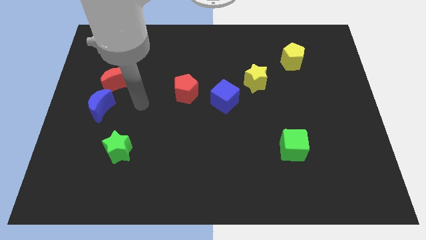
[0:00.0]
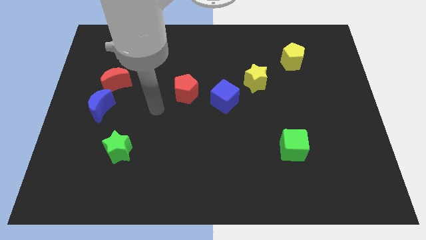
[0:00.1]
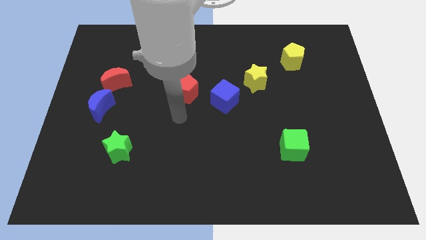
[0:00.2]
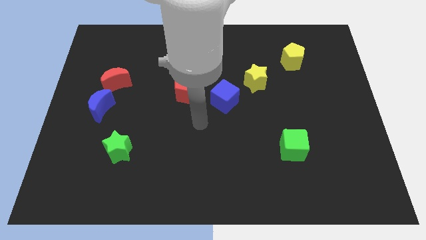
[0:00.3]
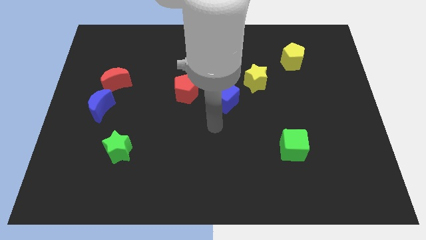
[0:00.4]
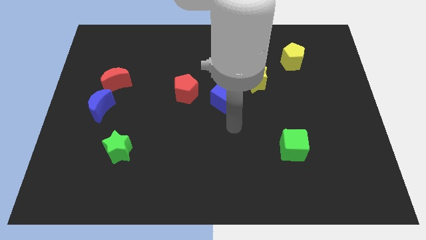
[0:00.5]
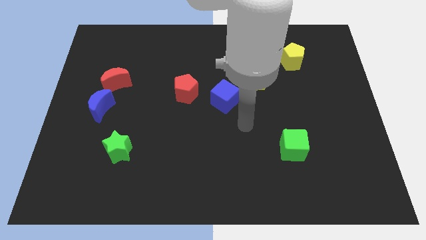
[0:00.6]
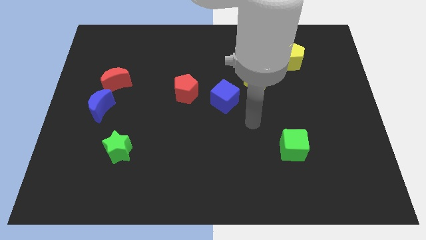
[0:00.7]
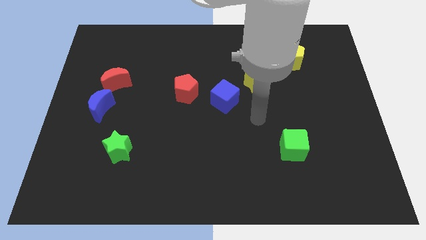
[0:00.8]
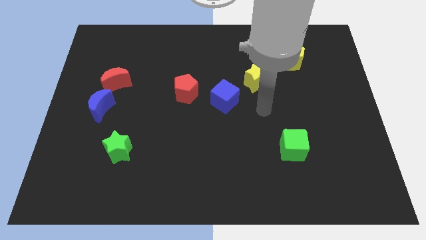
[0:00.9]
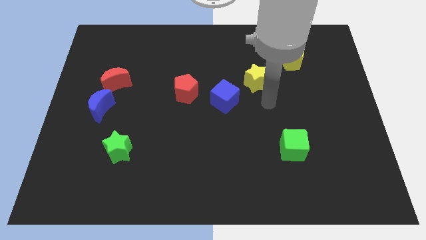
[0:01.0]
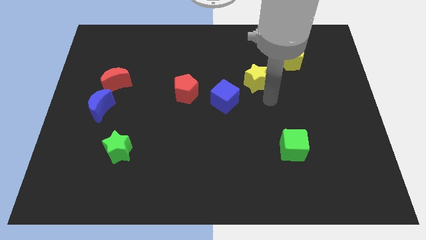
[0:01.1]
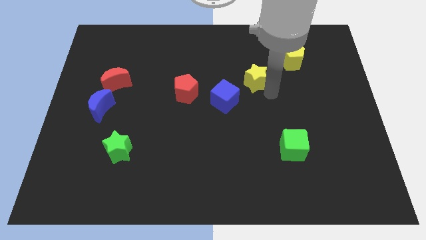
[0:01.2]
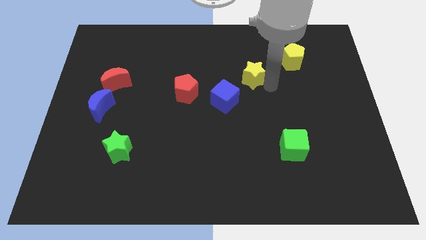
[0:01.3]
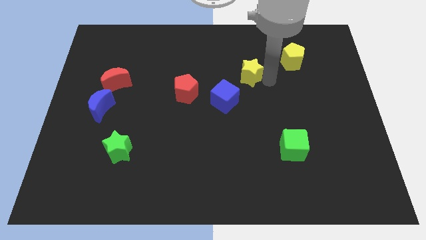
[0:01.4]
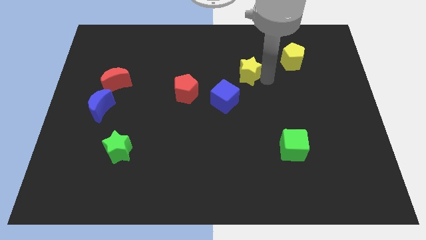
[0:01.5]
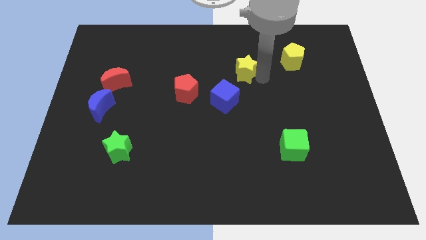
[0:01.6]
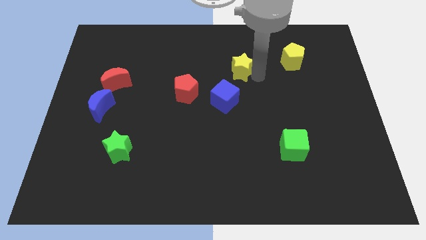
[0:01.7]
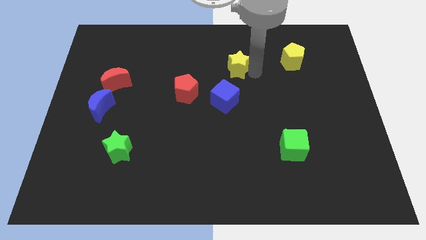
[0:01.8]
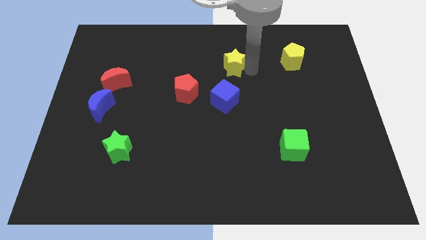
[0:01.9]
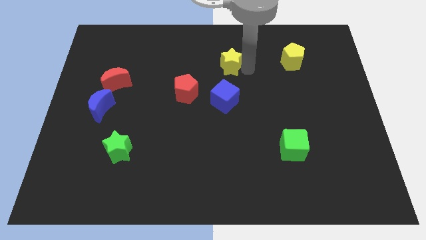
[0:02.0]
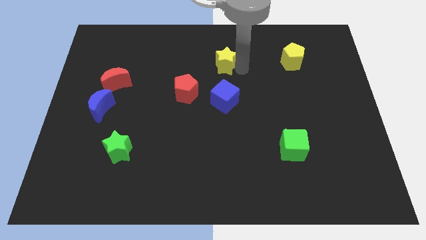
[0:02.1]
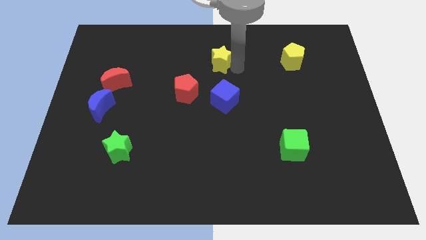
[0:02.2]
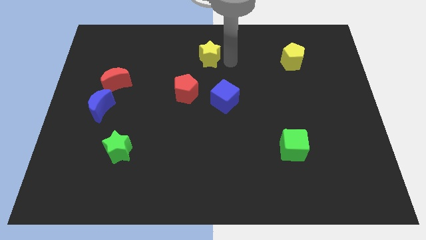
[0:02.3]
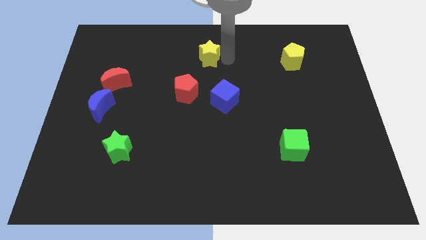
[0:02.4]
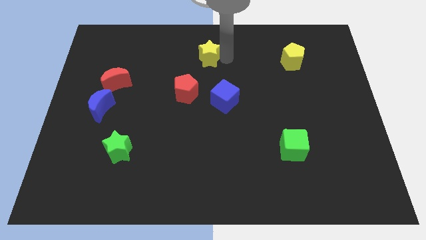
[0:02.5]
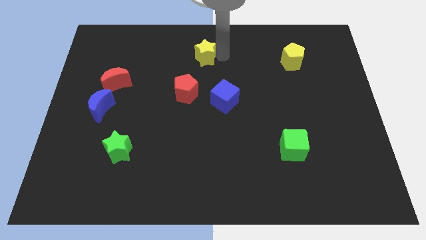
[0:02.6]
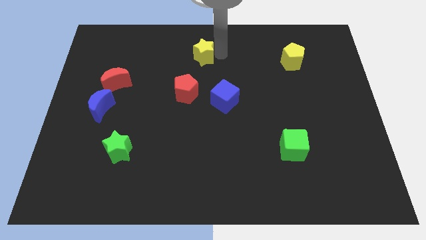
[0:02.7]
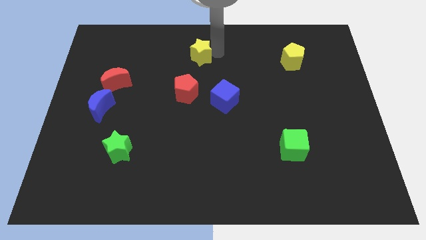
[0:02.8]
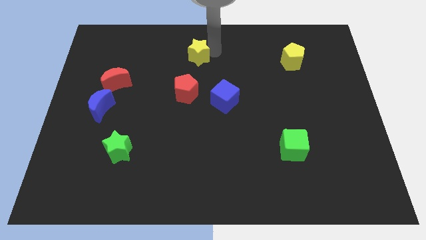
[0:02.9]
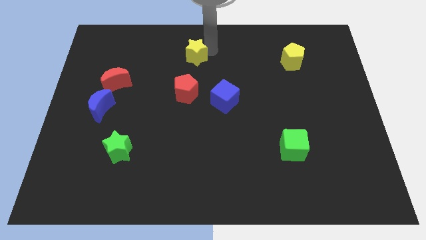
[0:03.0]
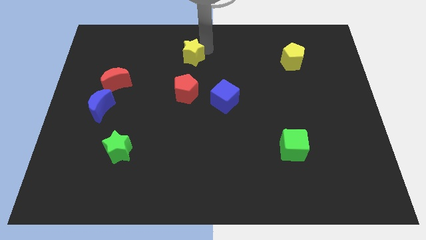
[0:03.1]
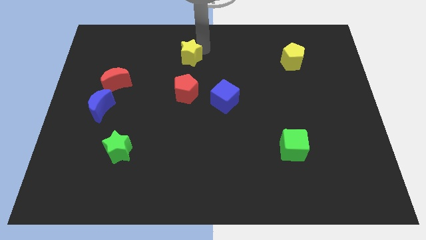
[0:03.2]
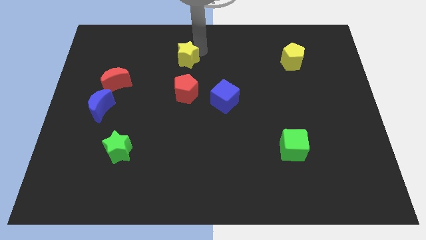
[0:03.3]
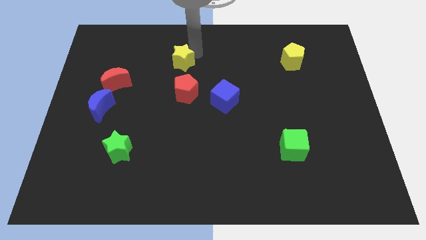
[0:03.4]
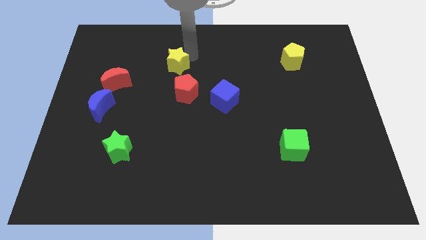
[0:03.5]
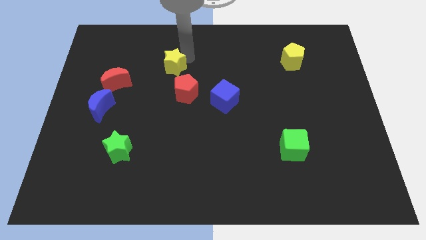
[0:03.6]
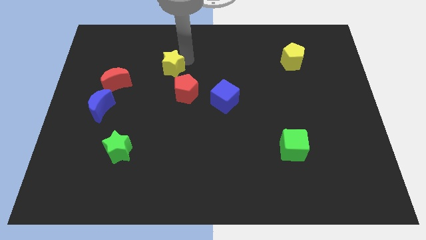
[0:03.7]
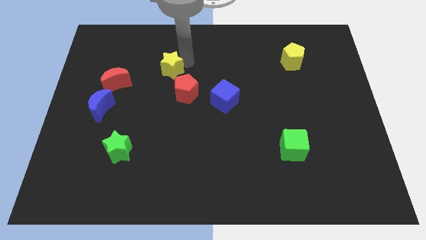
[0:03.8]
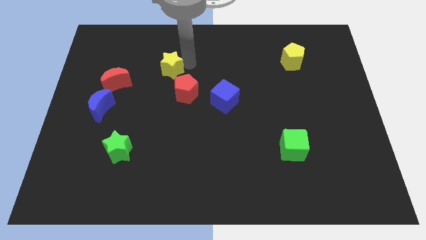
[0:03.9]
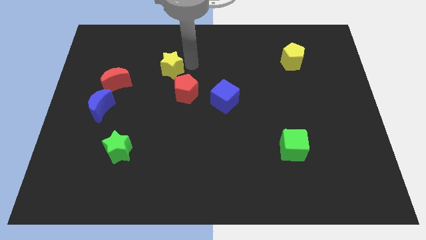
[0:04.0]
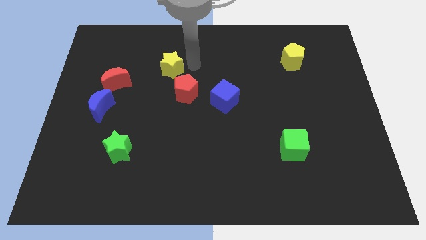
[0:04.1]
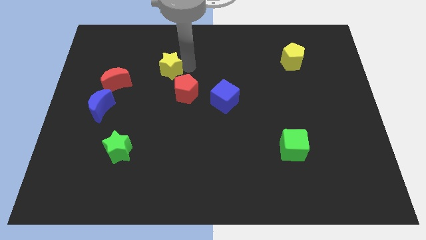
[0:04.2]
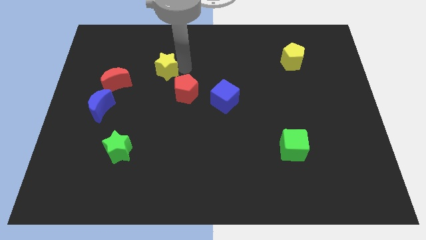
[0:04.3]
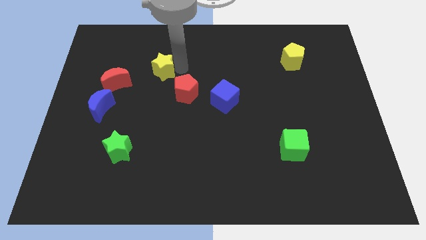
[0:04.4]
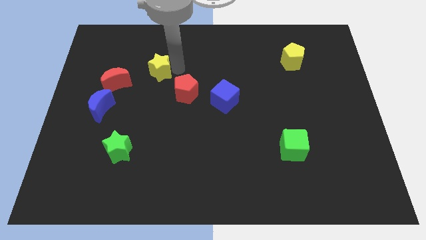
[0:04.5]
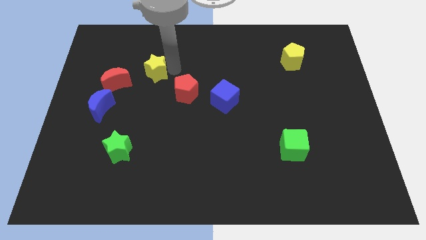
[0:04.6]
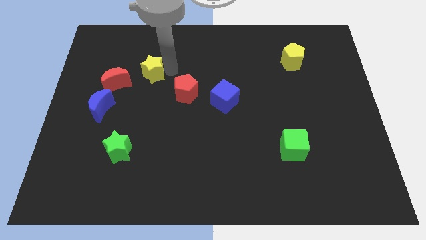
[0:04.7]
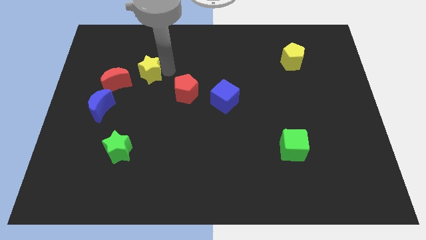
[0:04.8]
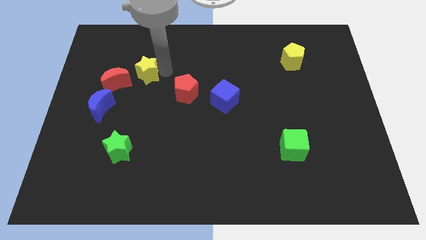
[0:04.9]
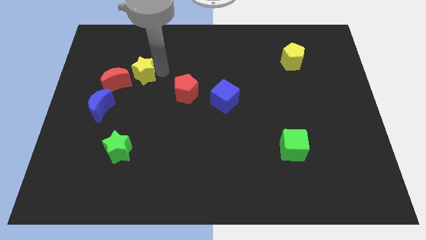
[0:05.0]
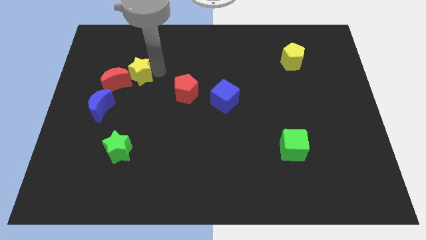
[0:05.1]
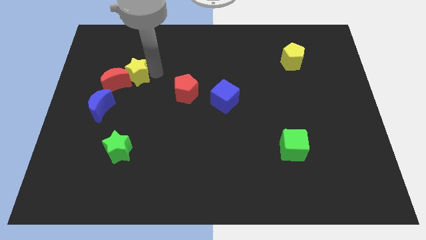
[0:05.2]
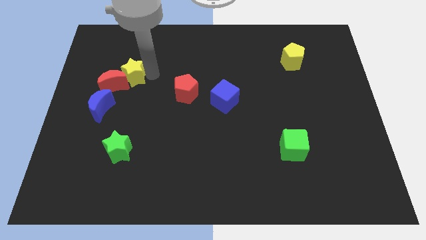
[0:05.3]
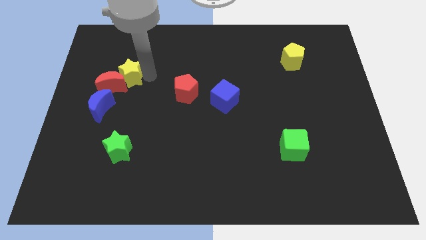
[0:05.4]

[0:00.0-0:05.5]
put the yellow star next to the red moon

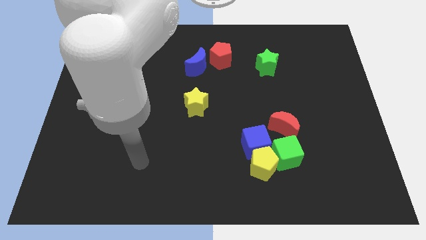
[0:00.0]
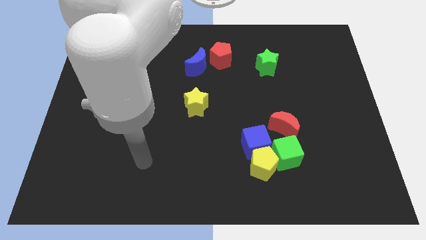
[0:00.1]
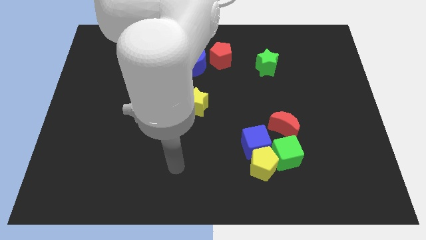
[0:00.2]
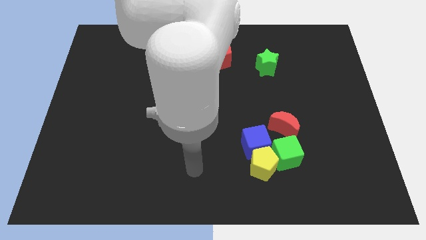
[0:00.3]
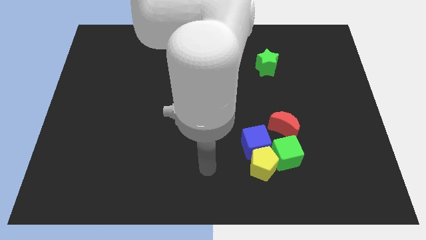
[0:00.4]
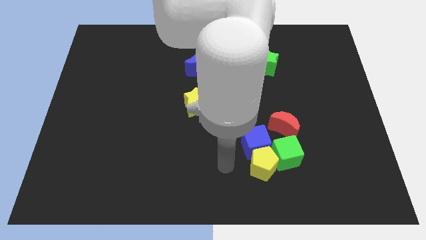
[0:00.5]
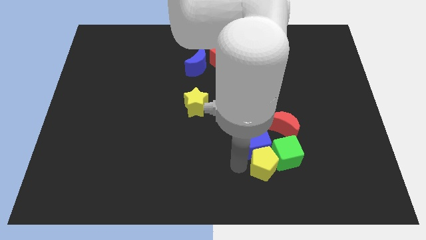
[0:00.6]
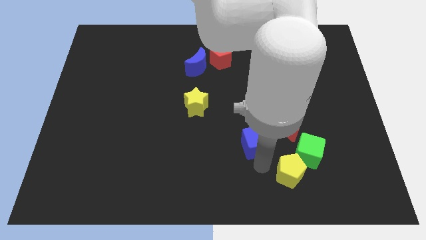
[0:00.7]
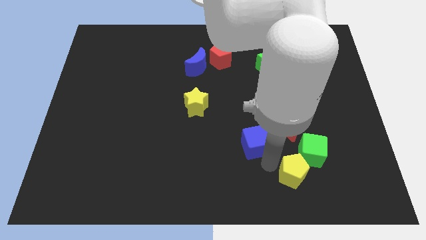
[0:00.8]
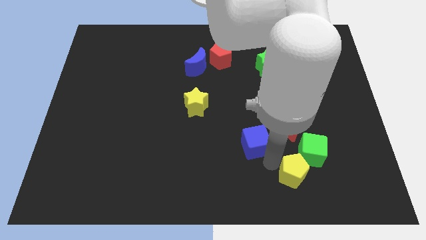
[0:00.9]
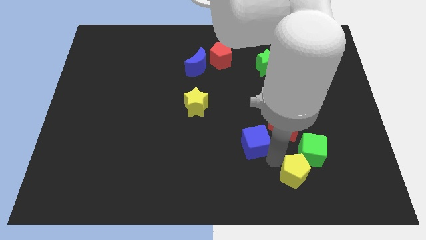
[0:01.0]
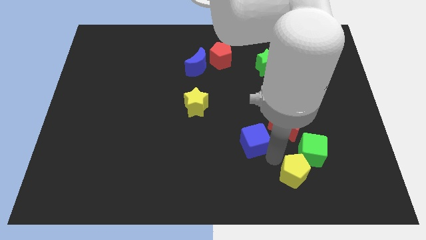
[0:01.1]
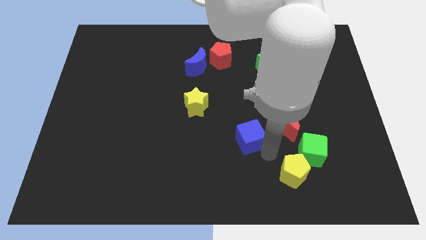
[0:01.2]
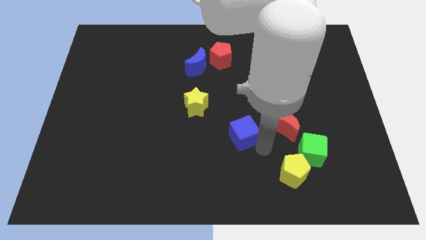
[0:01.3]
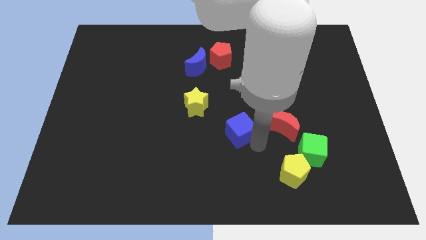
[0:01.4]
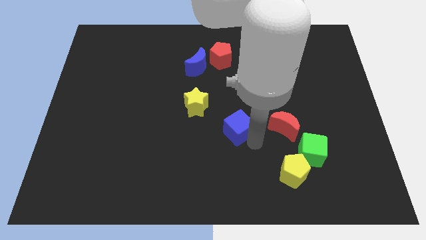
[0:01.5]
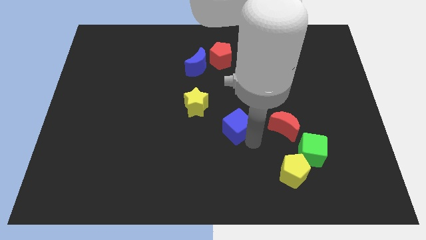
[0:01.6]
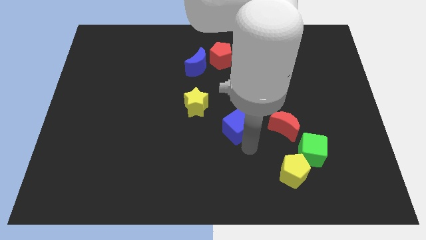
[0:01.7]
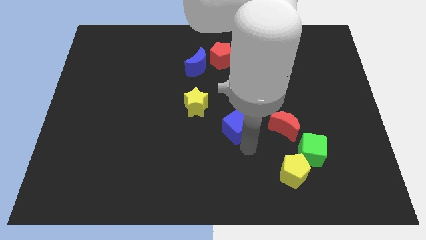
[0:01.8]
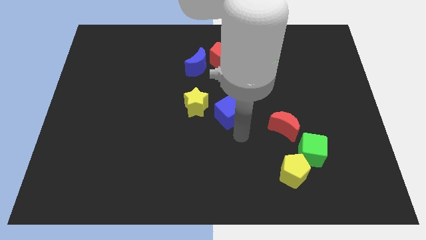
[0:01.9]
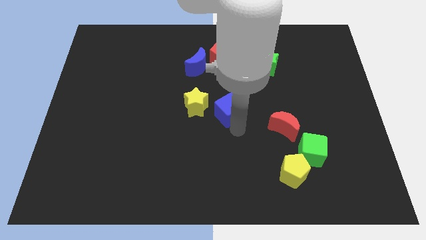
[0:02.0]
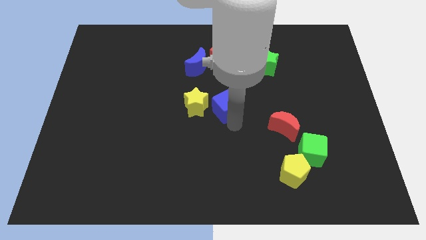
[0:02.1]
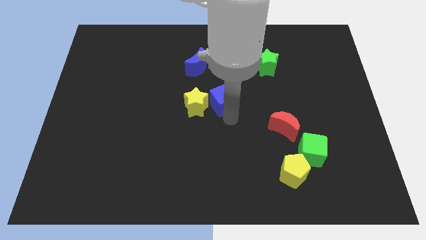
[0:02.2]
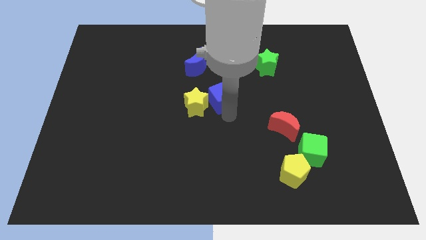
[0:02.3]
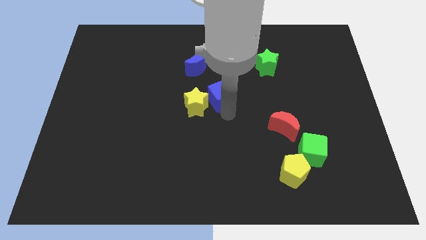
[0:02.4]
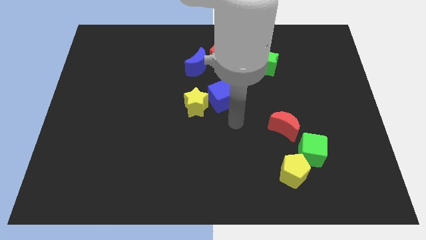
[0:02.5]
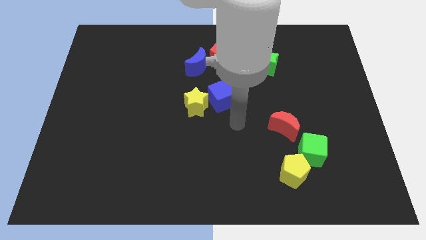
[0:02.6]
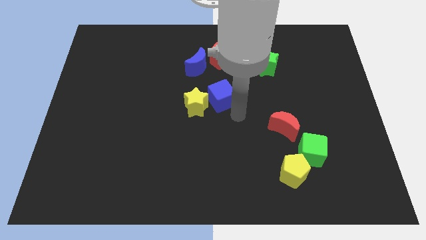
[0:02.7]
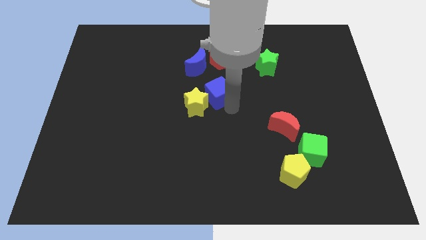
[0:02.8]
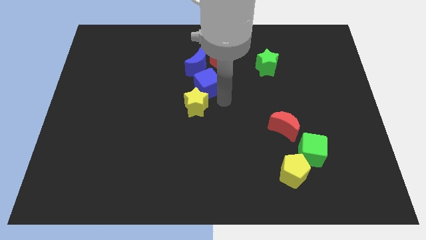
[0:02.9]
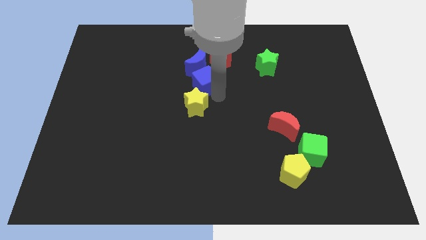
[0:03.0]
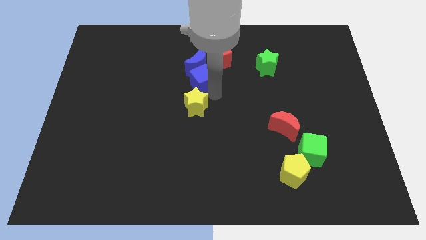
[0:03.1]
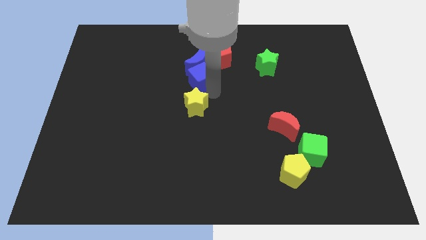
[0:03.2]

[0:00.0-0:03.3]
push the blue cube close to the blue moon
